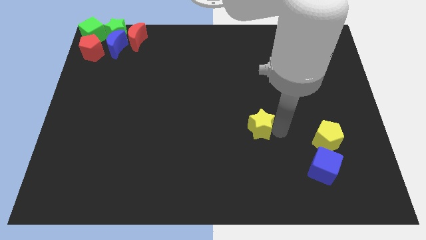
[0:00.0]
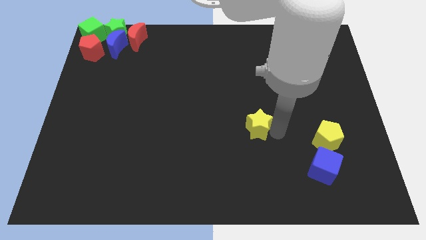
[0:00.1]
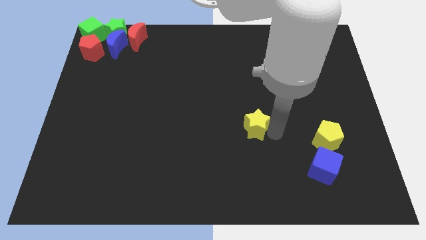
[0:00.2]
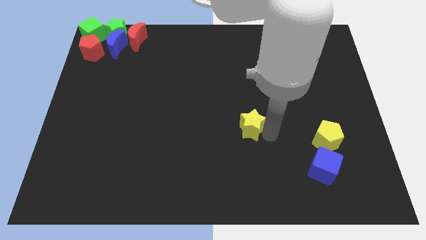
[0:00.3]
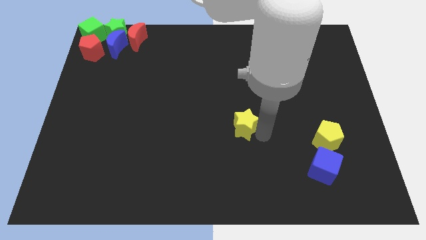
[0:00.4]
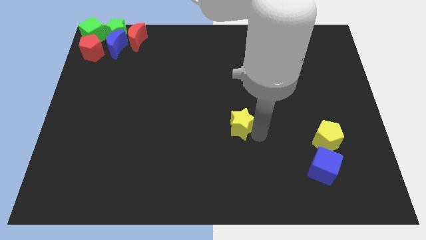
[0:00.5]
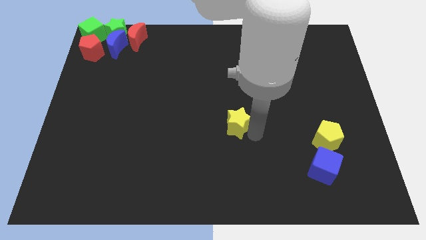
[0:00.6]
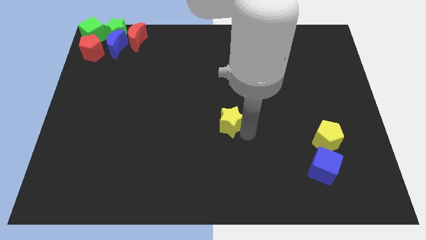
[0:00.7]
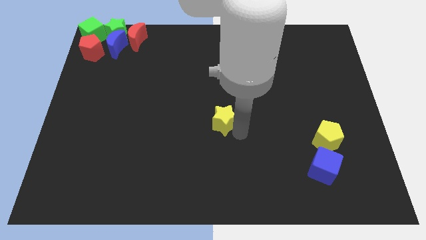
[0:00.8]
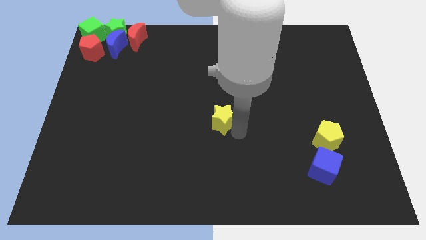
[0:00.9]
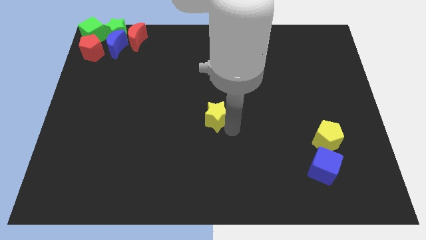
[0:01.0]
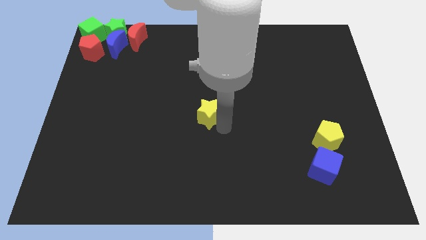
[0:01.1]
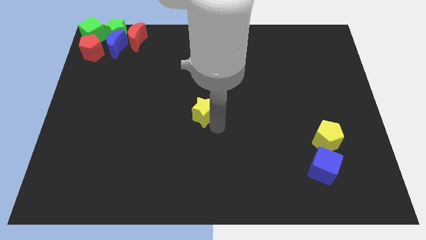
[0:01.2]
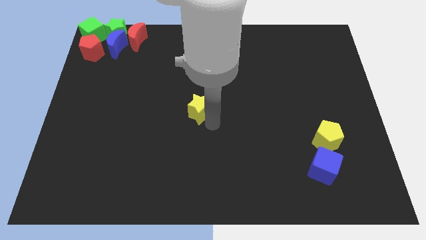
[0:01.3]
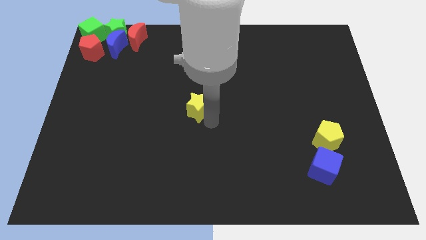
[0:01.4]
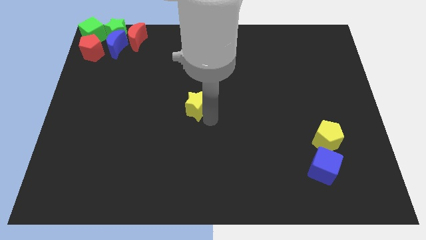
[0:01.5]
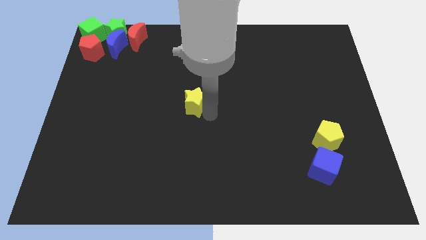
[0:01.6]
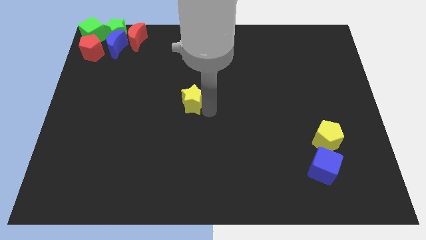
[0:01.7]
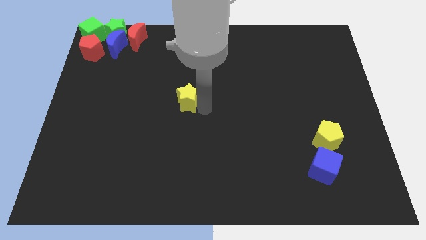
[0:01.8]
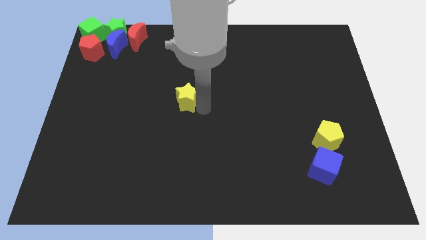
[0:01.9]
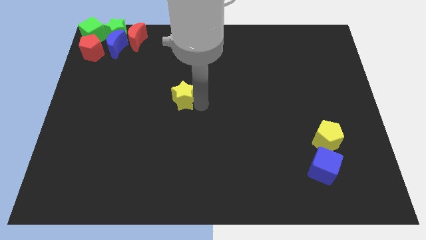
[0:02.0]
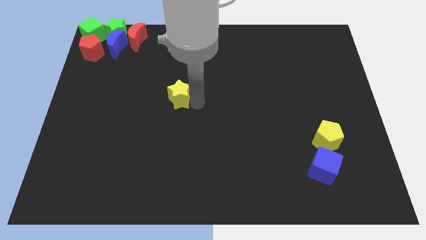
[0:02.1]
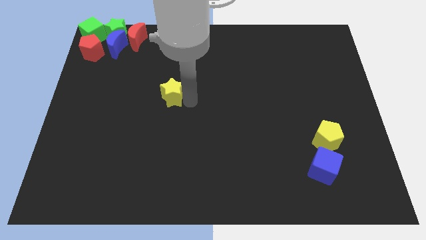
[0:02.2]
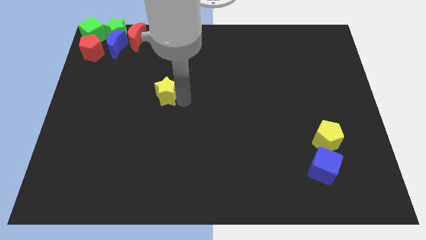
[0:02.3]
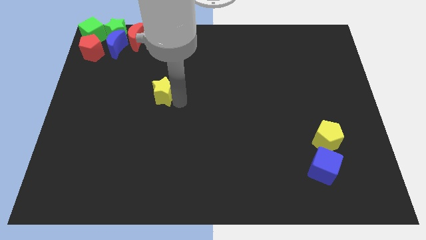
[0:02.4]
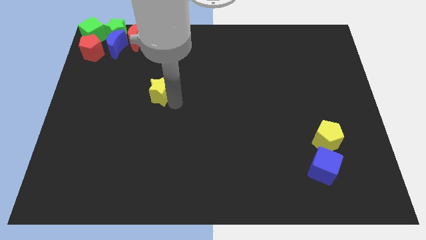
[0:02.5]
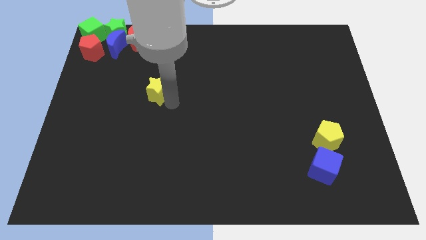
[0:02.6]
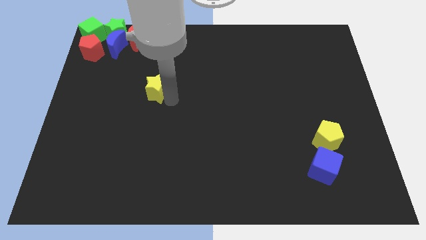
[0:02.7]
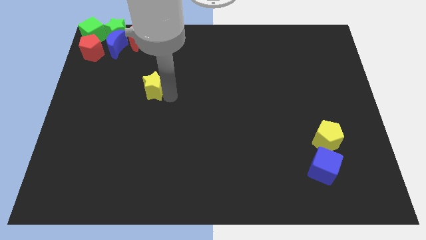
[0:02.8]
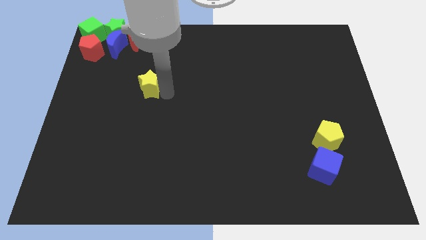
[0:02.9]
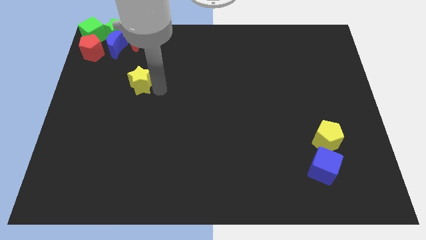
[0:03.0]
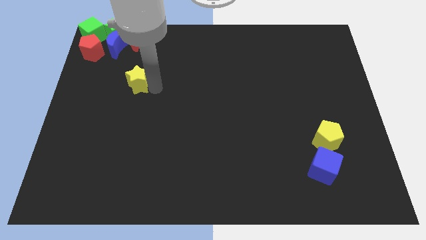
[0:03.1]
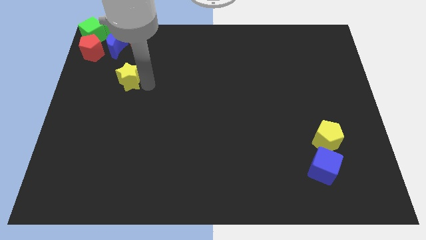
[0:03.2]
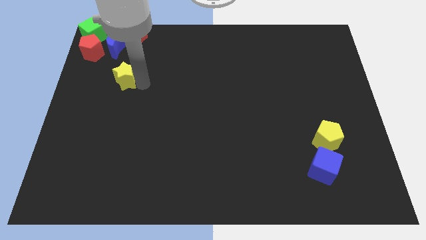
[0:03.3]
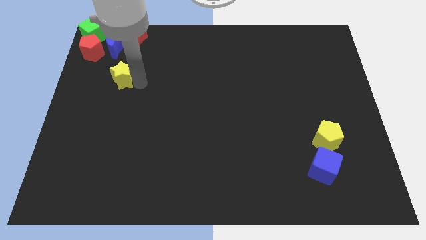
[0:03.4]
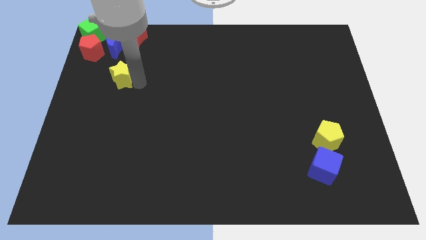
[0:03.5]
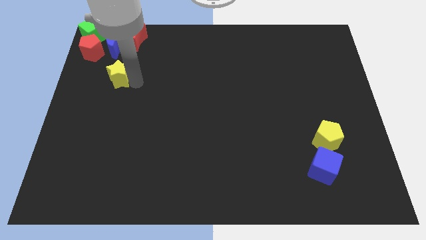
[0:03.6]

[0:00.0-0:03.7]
move the yellow star towards the red pentagon

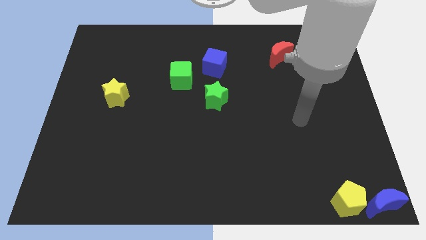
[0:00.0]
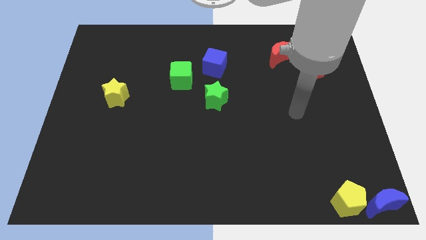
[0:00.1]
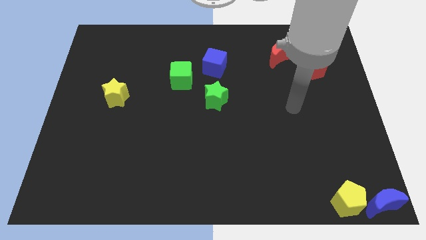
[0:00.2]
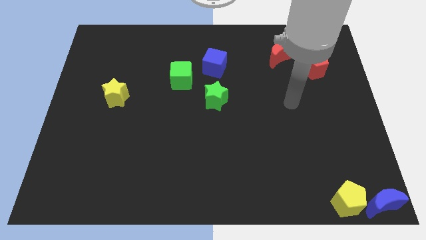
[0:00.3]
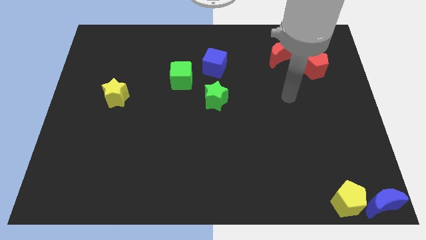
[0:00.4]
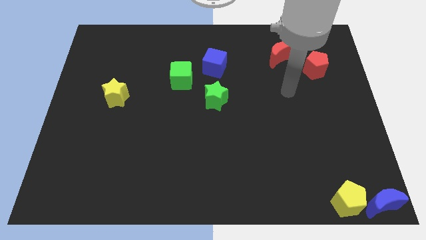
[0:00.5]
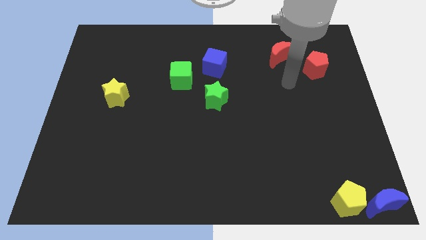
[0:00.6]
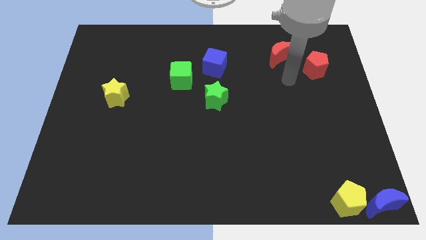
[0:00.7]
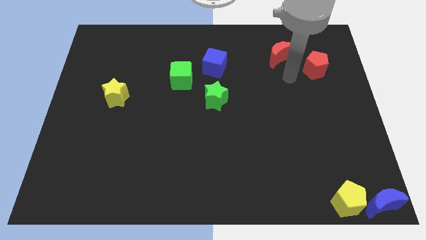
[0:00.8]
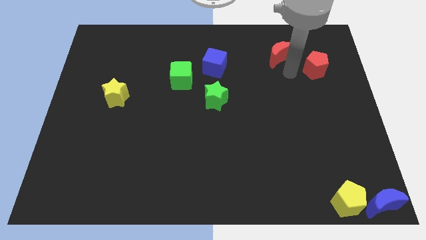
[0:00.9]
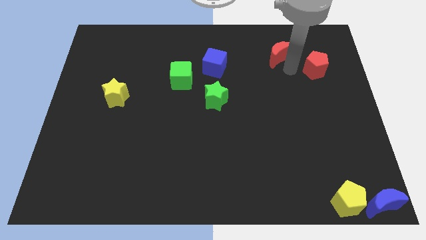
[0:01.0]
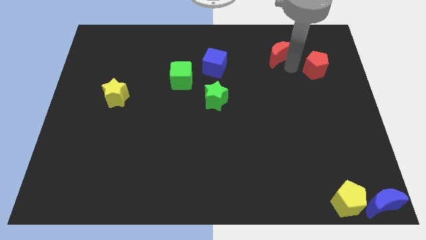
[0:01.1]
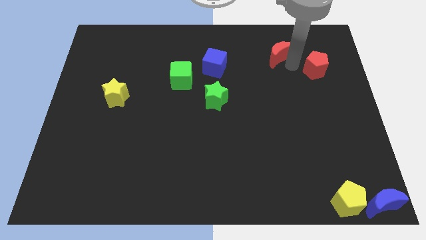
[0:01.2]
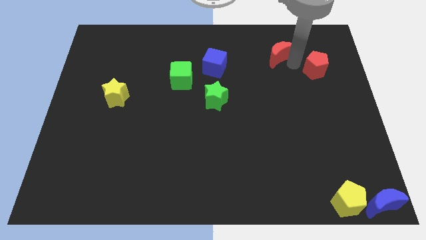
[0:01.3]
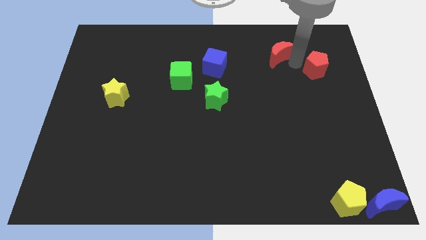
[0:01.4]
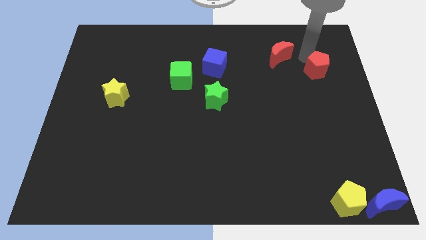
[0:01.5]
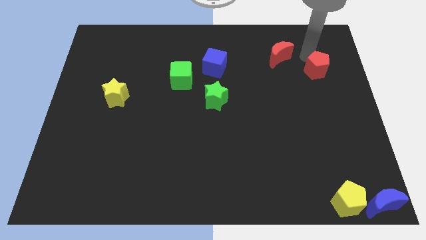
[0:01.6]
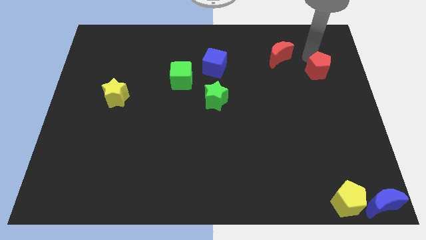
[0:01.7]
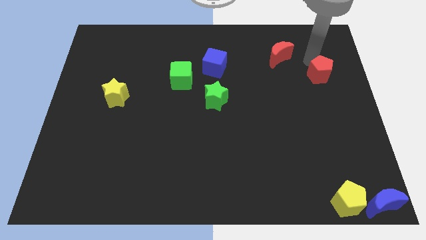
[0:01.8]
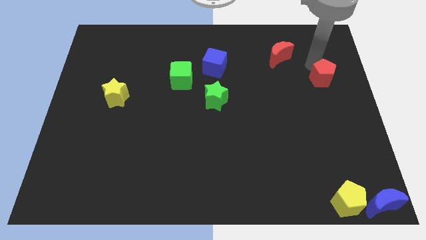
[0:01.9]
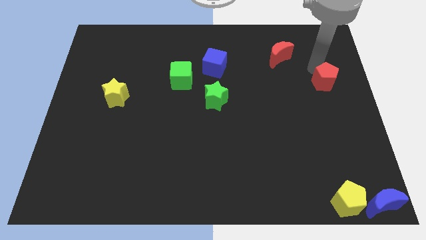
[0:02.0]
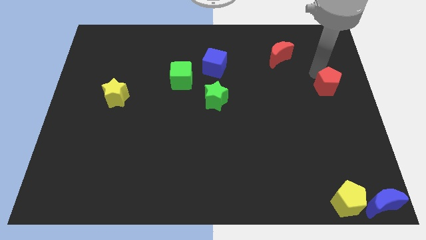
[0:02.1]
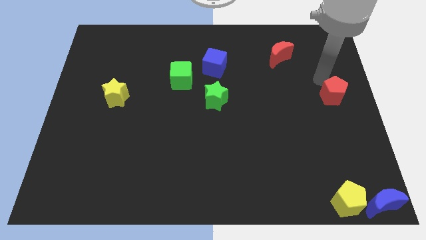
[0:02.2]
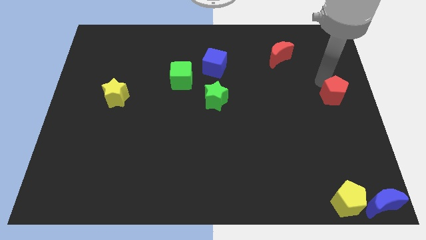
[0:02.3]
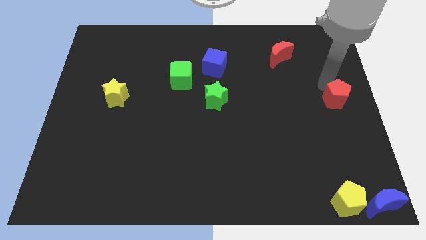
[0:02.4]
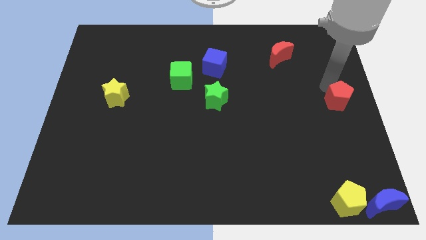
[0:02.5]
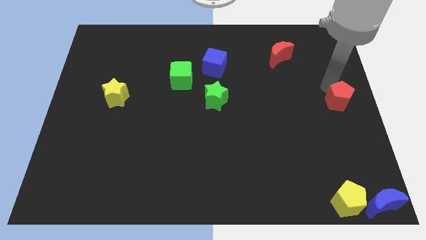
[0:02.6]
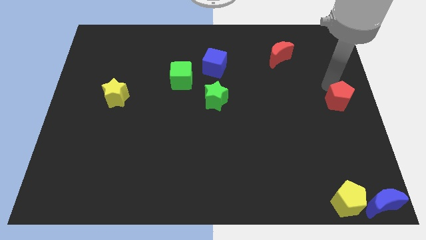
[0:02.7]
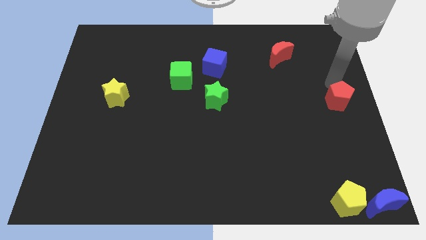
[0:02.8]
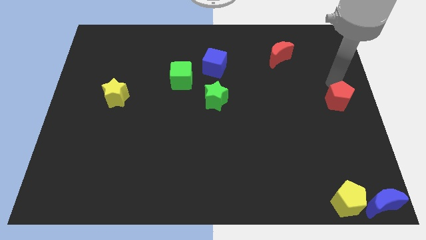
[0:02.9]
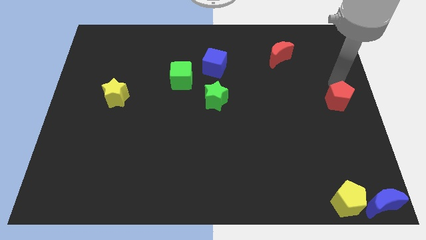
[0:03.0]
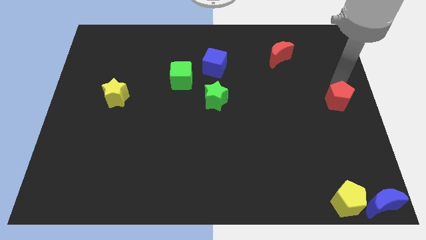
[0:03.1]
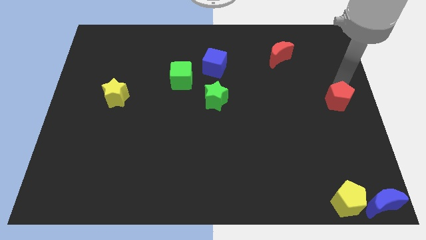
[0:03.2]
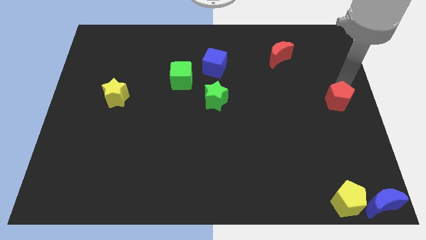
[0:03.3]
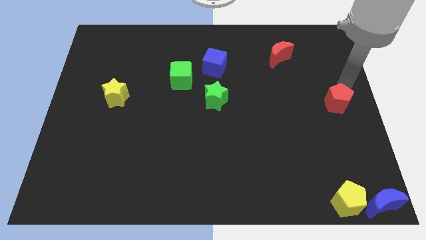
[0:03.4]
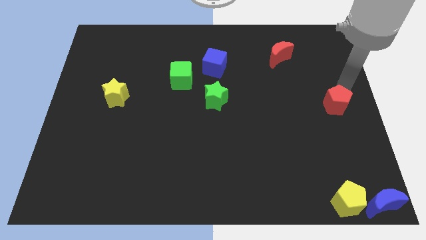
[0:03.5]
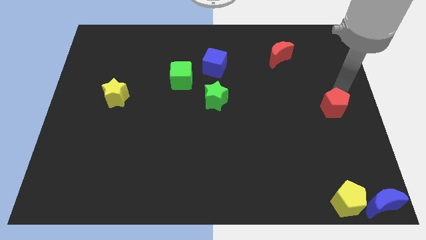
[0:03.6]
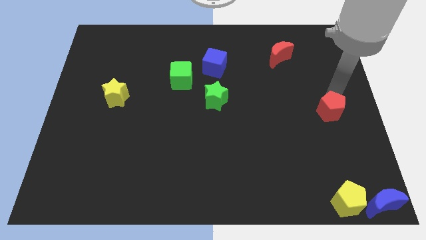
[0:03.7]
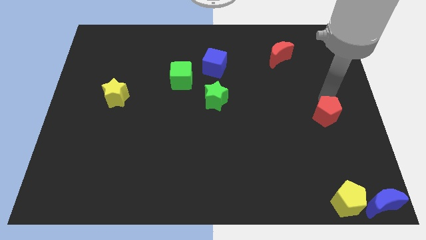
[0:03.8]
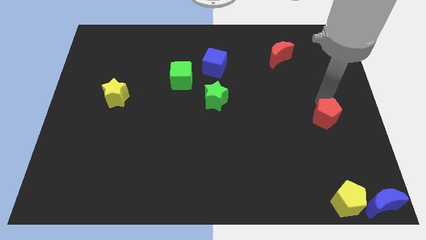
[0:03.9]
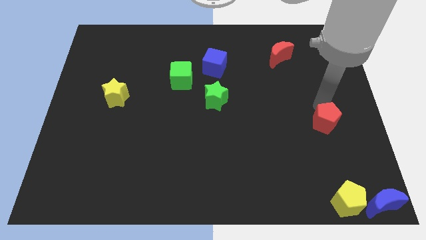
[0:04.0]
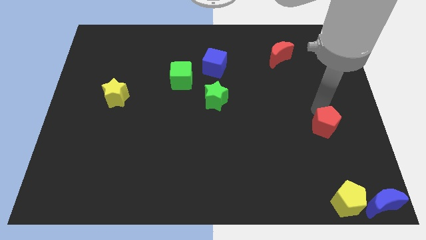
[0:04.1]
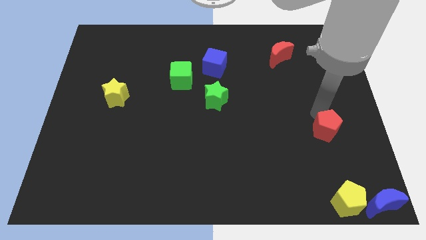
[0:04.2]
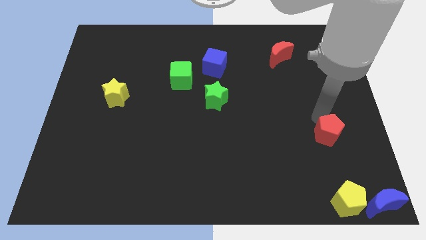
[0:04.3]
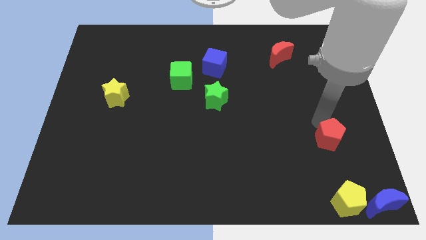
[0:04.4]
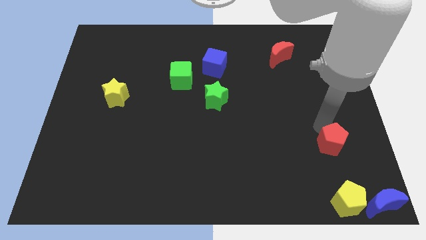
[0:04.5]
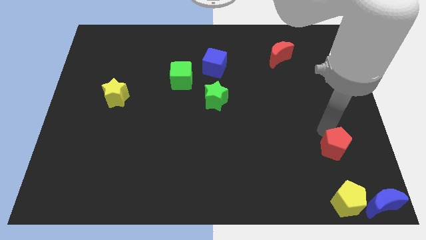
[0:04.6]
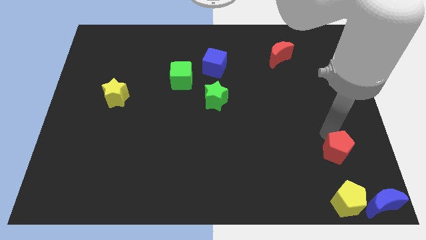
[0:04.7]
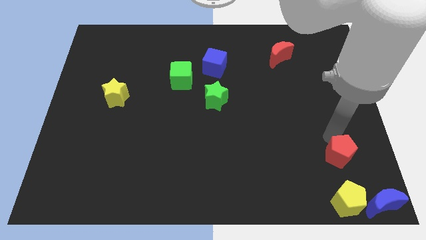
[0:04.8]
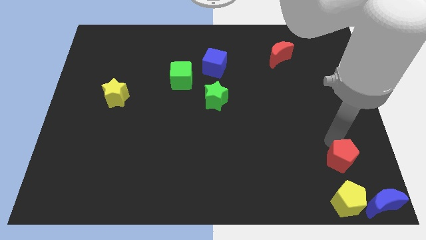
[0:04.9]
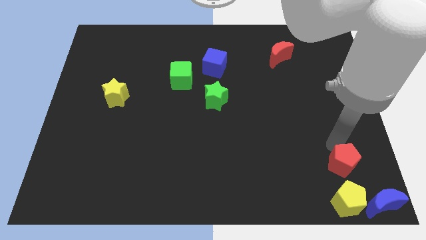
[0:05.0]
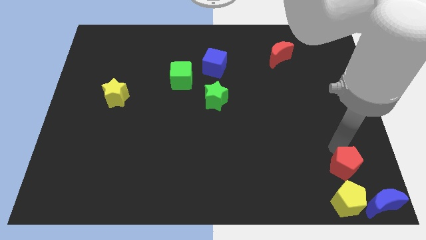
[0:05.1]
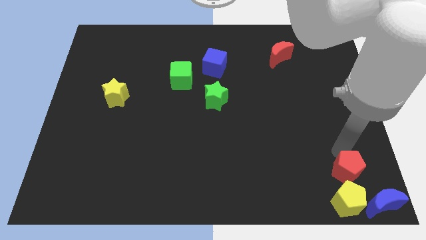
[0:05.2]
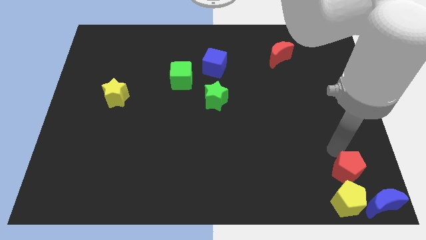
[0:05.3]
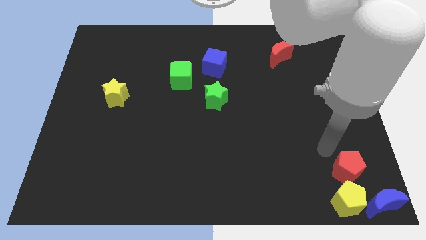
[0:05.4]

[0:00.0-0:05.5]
slide the red pentagon close to the top side of the yellow pentagon
